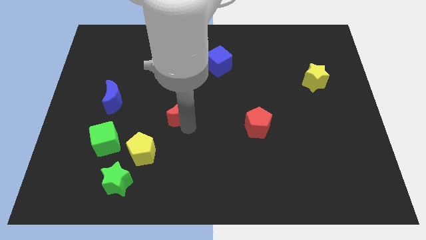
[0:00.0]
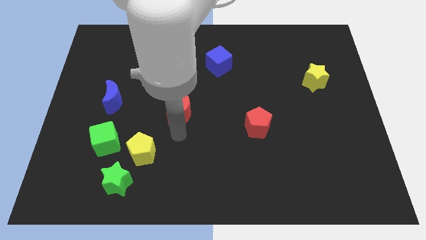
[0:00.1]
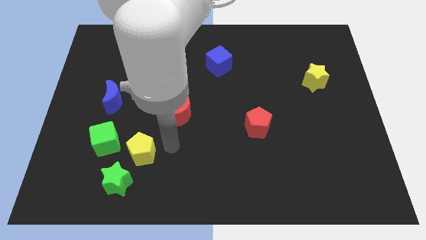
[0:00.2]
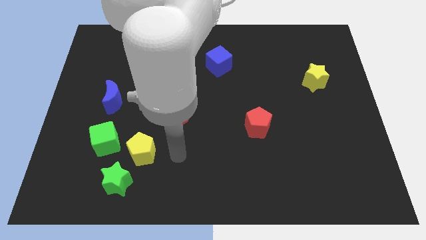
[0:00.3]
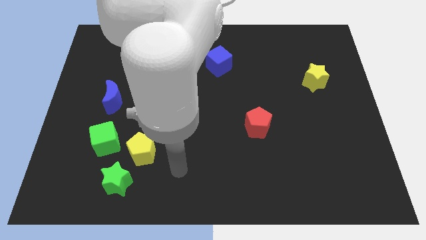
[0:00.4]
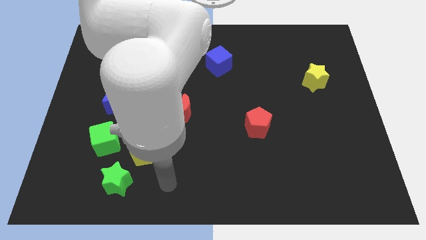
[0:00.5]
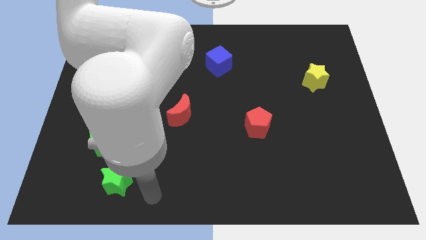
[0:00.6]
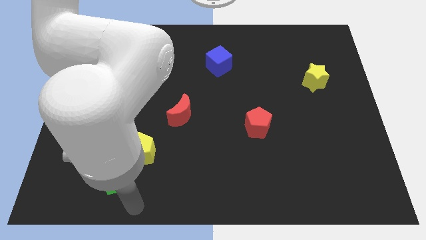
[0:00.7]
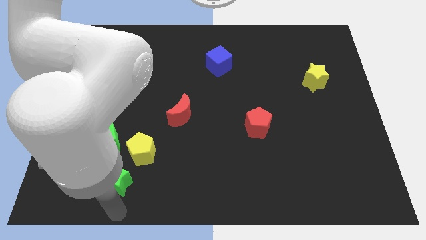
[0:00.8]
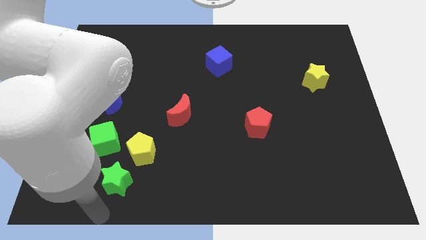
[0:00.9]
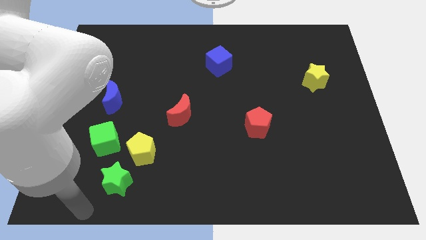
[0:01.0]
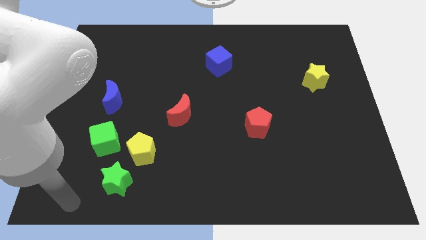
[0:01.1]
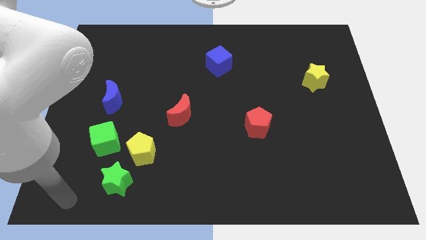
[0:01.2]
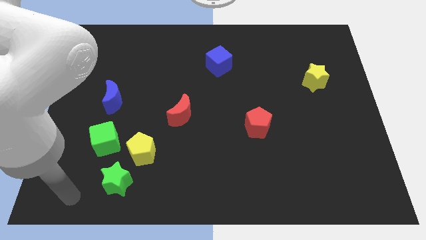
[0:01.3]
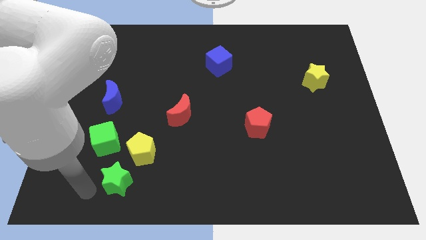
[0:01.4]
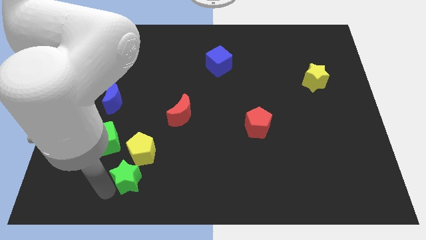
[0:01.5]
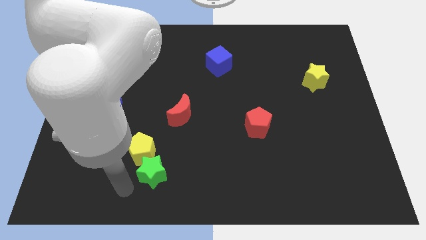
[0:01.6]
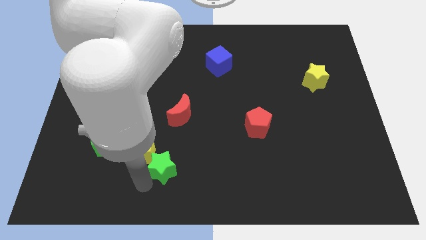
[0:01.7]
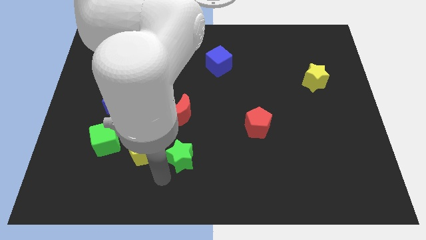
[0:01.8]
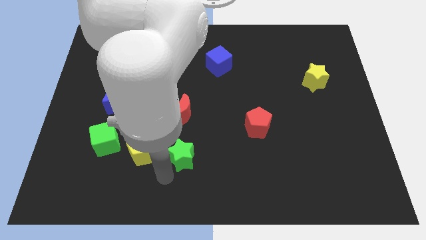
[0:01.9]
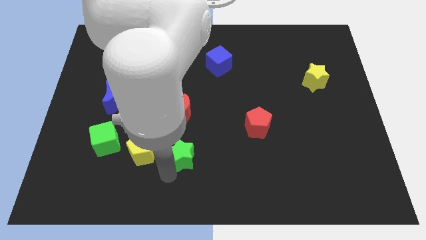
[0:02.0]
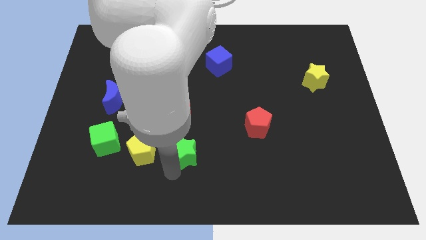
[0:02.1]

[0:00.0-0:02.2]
place the green star to the right of the yellow pentagon

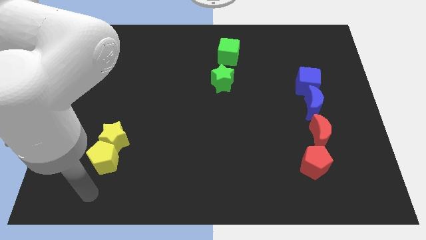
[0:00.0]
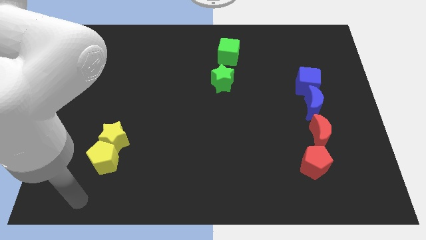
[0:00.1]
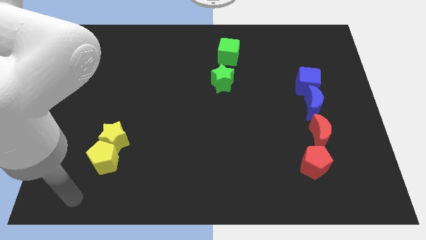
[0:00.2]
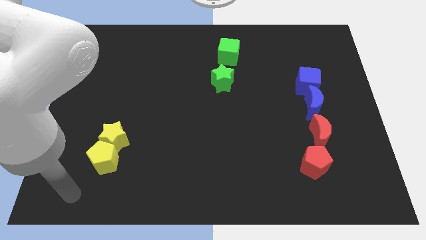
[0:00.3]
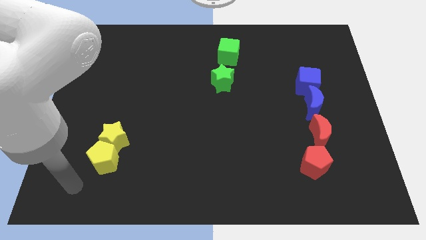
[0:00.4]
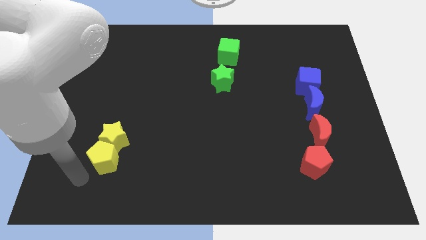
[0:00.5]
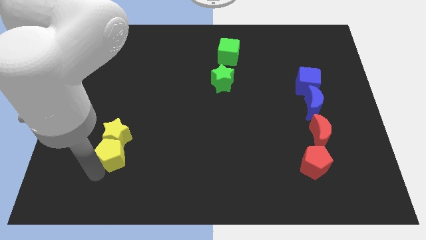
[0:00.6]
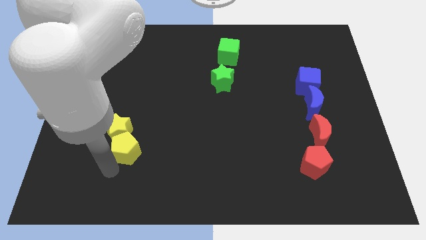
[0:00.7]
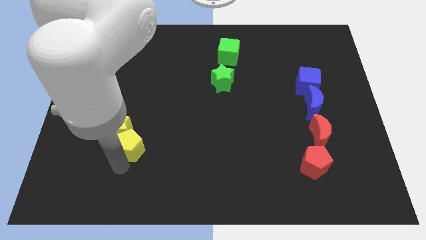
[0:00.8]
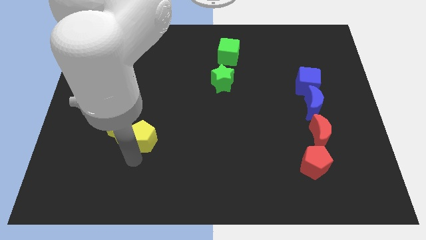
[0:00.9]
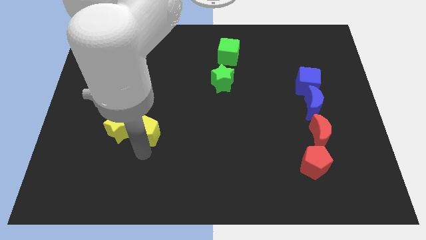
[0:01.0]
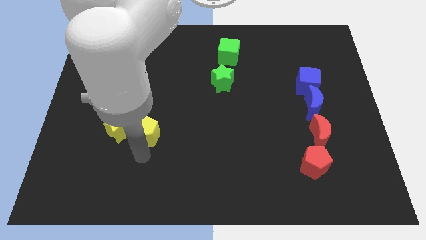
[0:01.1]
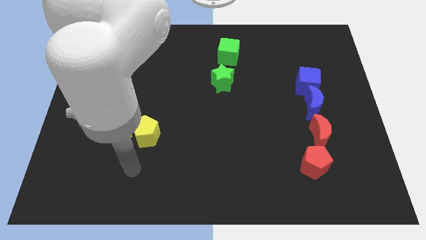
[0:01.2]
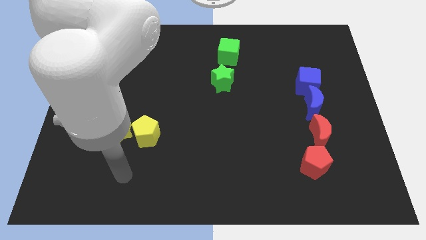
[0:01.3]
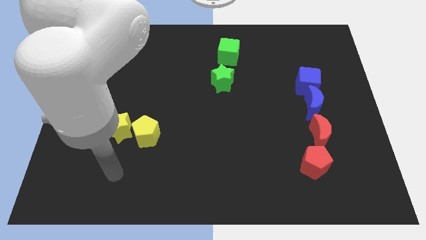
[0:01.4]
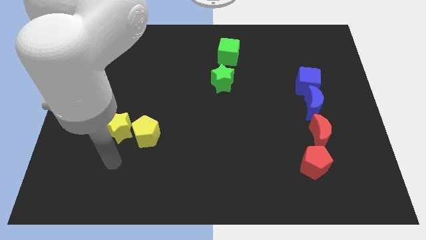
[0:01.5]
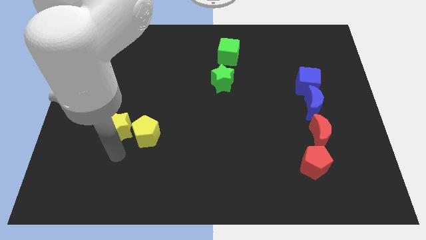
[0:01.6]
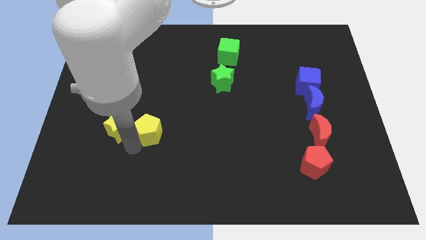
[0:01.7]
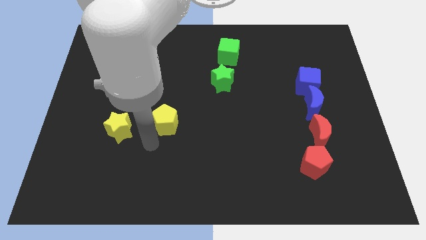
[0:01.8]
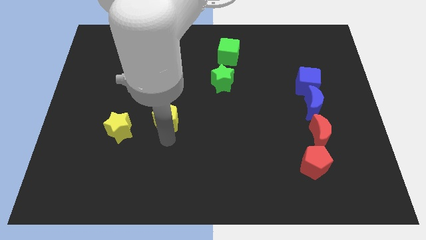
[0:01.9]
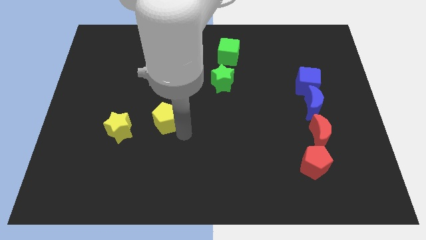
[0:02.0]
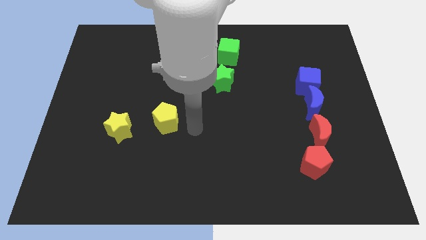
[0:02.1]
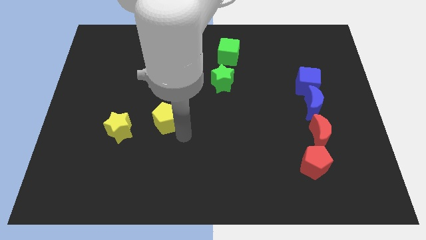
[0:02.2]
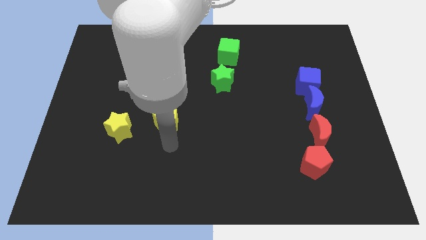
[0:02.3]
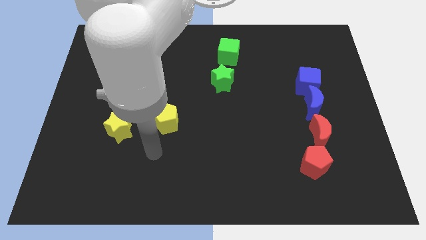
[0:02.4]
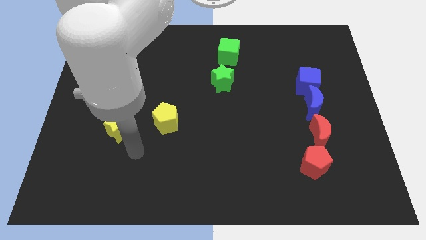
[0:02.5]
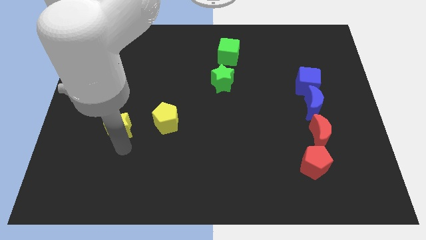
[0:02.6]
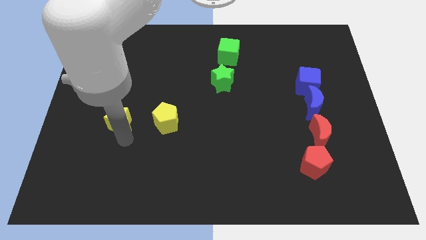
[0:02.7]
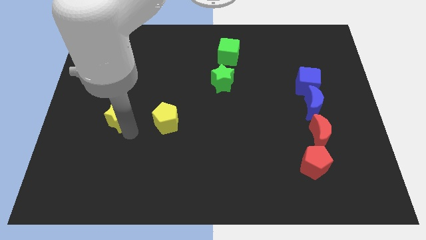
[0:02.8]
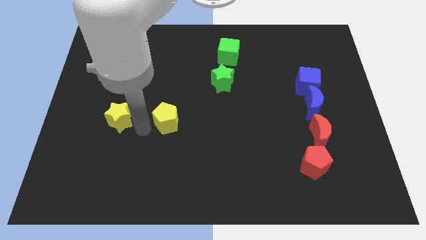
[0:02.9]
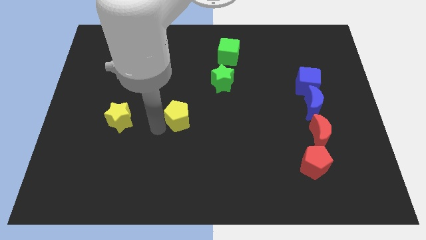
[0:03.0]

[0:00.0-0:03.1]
place yellow blocks parallel to each other

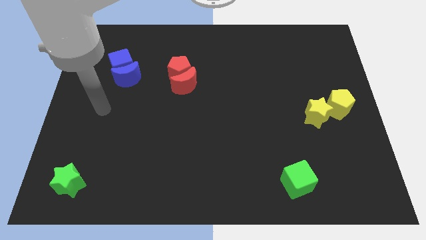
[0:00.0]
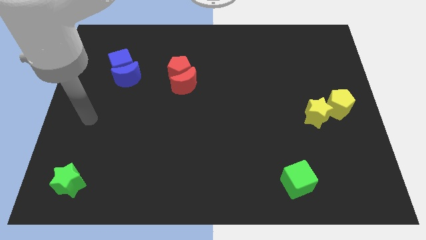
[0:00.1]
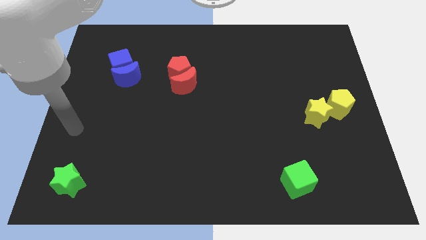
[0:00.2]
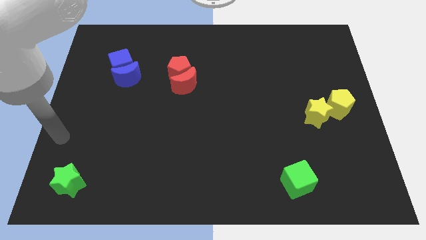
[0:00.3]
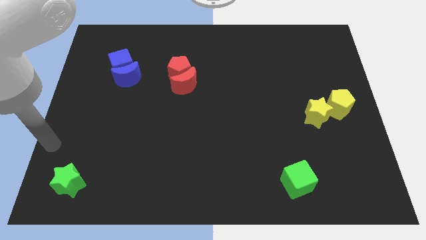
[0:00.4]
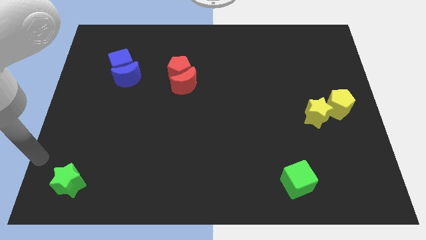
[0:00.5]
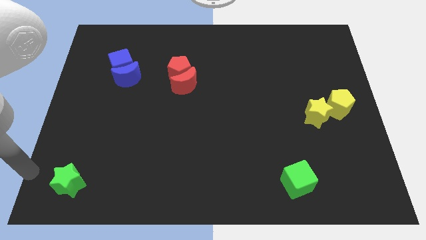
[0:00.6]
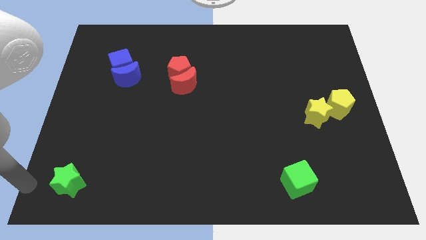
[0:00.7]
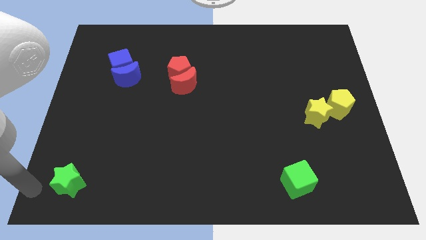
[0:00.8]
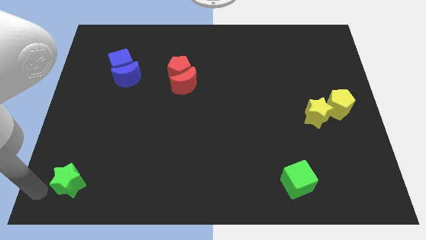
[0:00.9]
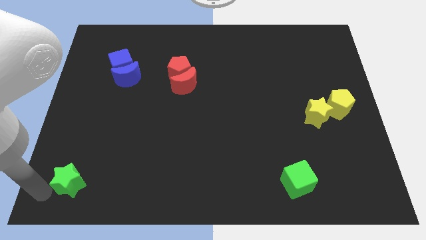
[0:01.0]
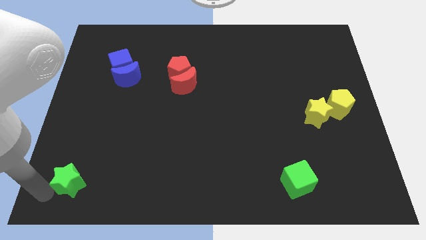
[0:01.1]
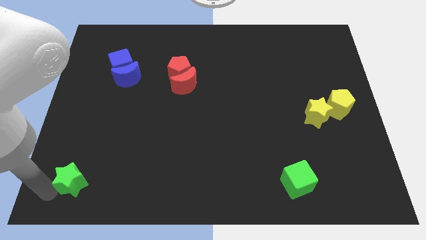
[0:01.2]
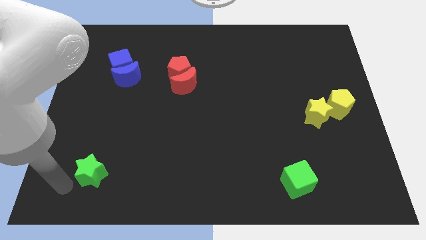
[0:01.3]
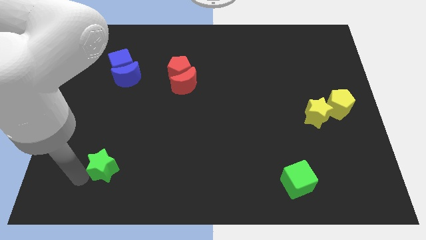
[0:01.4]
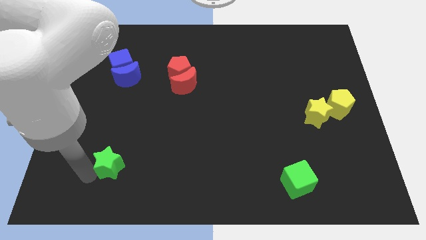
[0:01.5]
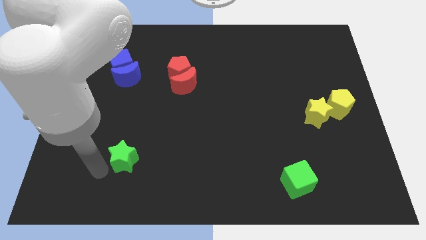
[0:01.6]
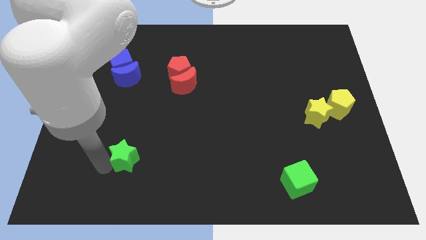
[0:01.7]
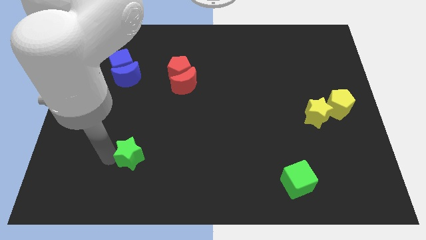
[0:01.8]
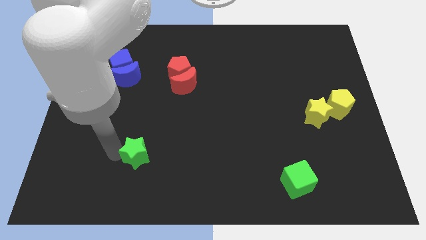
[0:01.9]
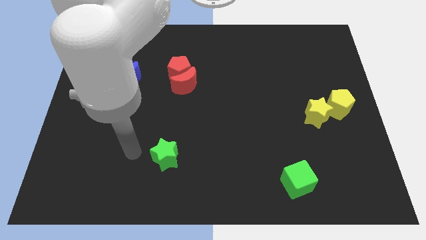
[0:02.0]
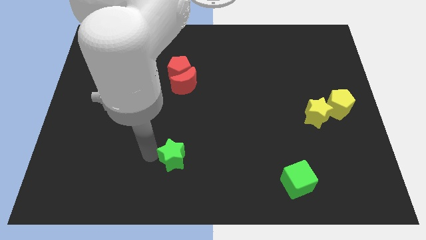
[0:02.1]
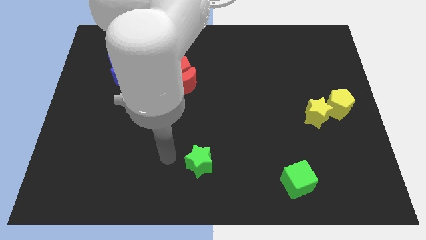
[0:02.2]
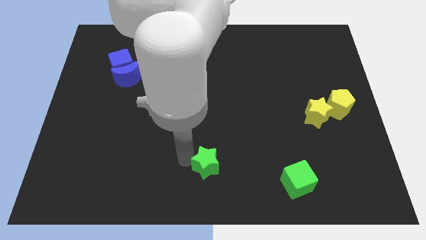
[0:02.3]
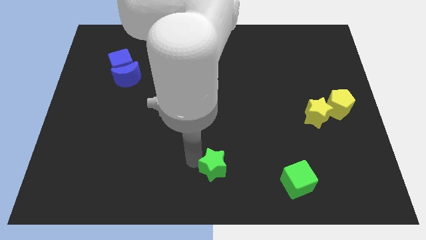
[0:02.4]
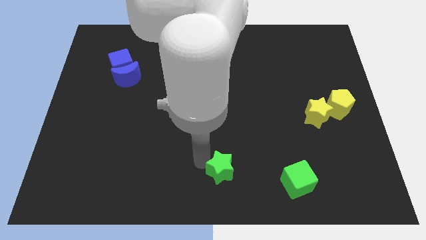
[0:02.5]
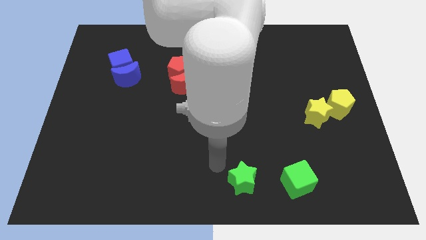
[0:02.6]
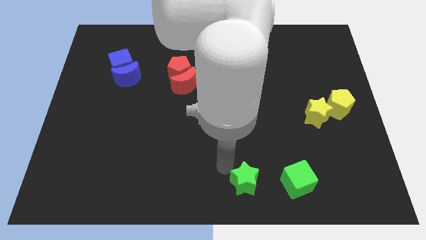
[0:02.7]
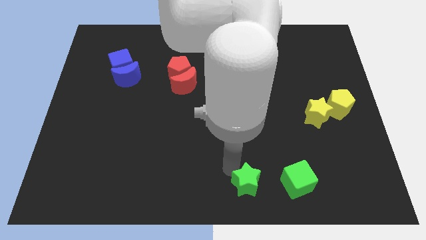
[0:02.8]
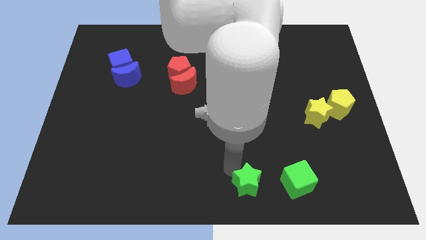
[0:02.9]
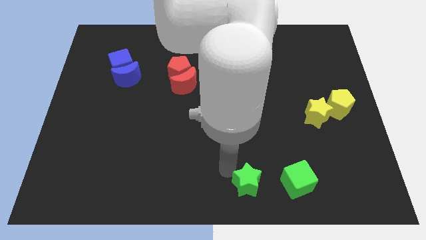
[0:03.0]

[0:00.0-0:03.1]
move the green star to the left of the green cube

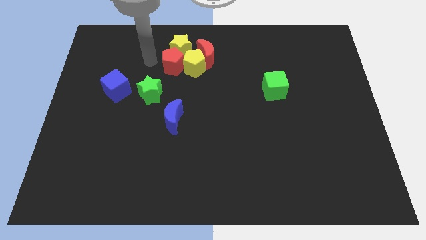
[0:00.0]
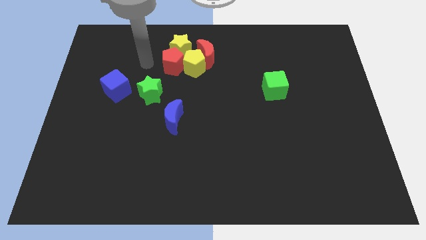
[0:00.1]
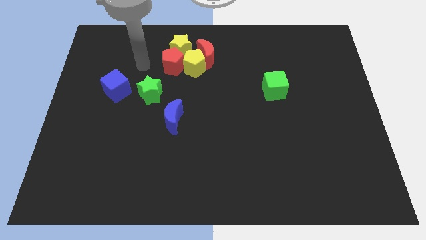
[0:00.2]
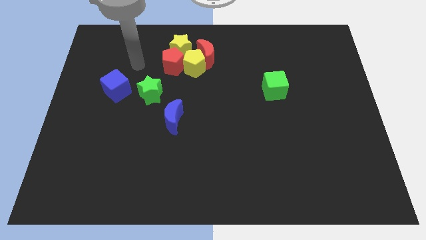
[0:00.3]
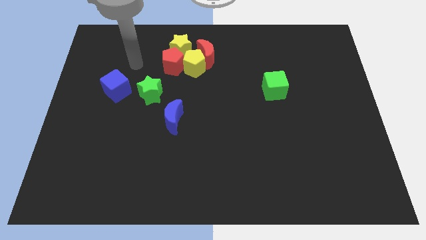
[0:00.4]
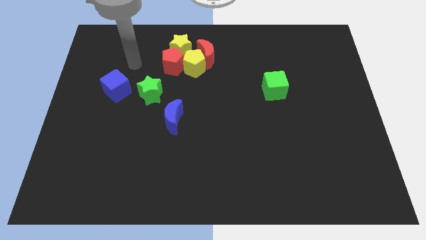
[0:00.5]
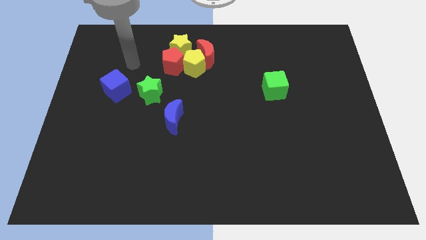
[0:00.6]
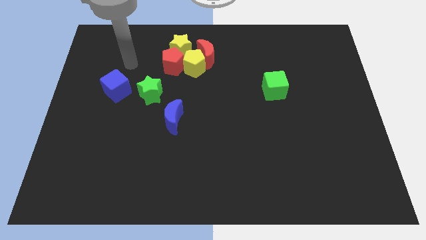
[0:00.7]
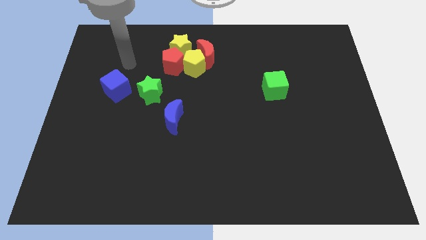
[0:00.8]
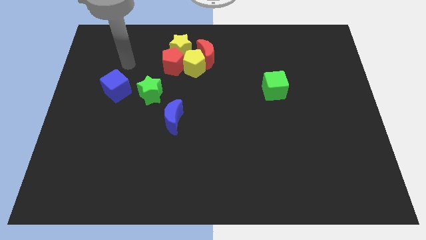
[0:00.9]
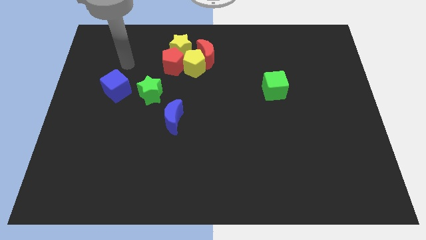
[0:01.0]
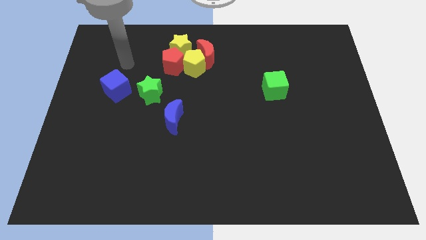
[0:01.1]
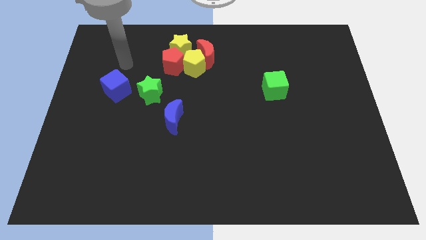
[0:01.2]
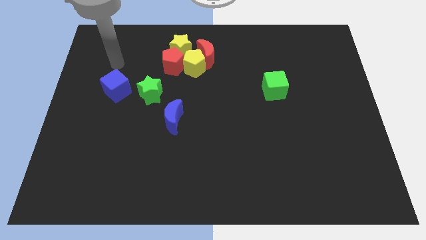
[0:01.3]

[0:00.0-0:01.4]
move your arm above the blue cube
